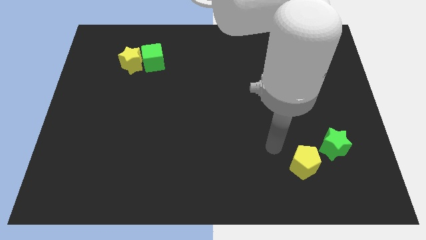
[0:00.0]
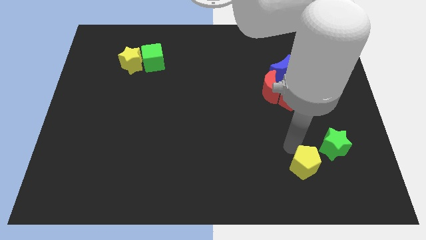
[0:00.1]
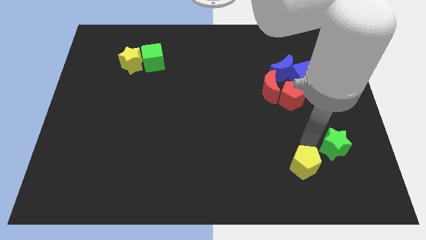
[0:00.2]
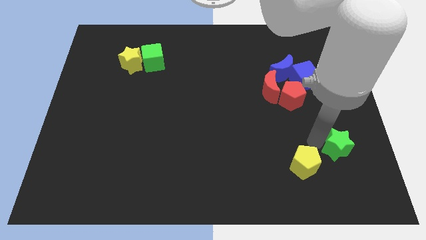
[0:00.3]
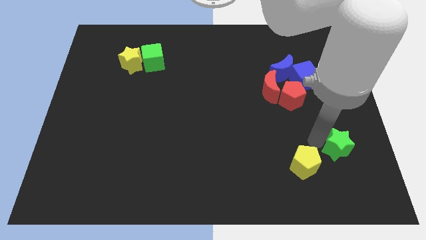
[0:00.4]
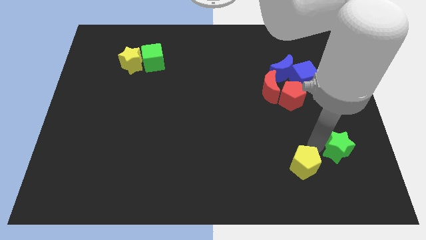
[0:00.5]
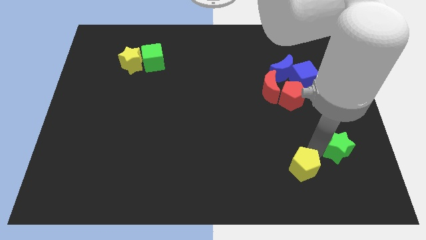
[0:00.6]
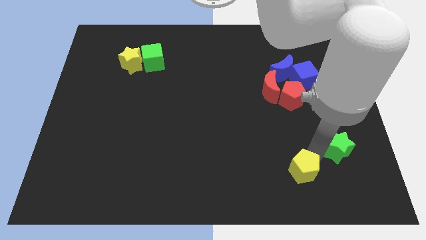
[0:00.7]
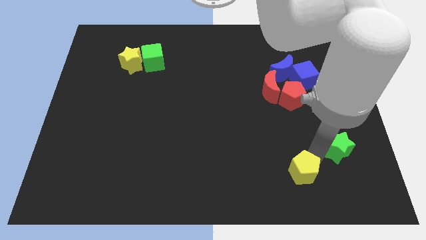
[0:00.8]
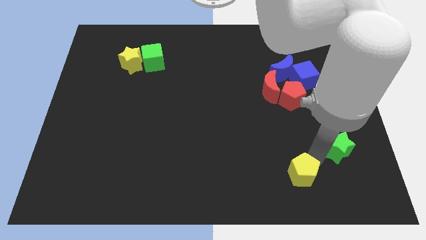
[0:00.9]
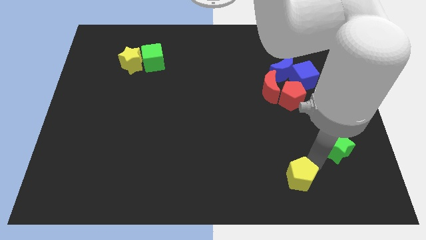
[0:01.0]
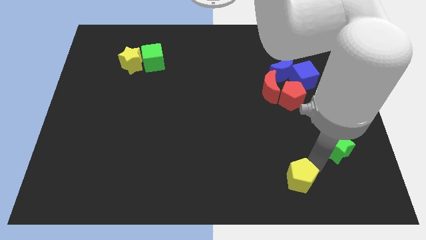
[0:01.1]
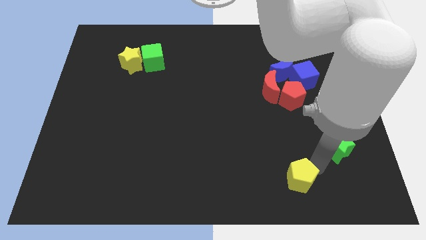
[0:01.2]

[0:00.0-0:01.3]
place your arm in between green star and yellow pentagon

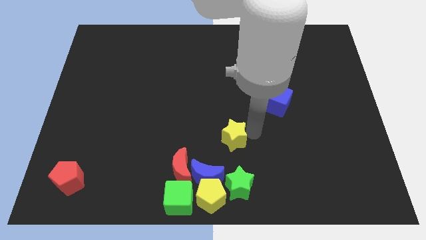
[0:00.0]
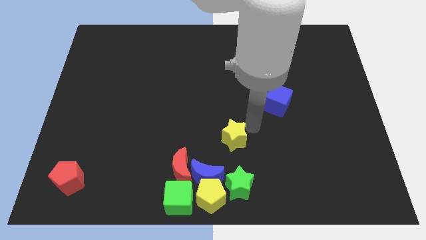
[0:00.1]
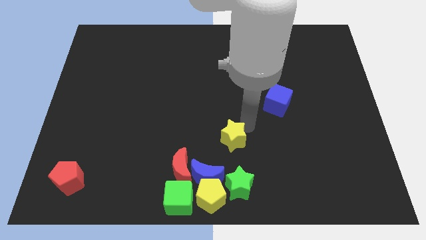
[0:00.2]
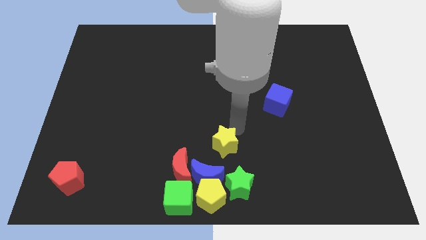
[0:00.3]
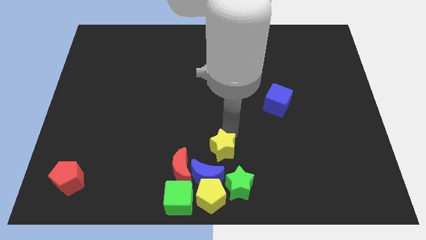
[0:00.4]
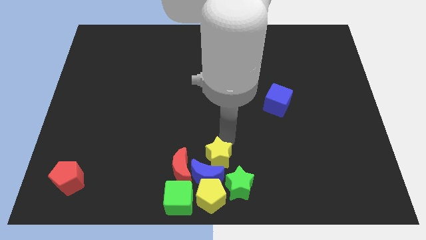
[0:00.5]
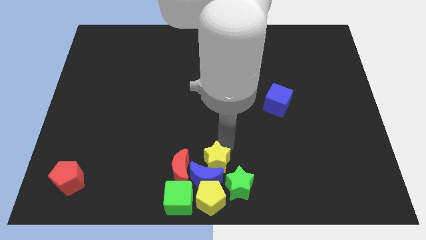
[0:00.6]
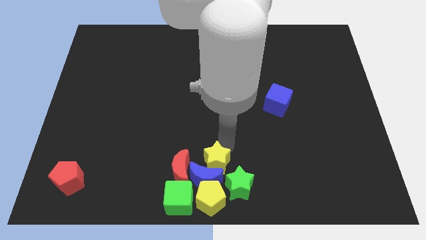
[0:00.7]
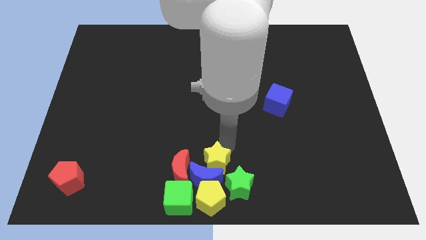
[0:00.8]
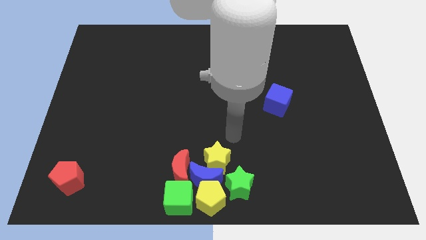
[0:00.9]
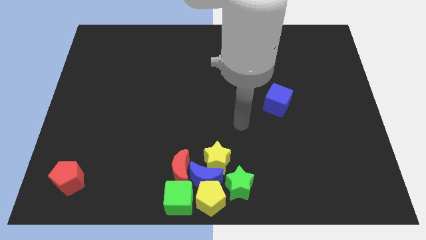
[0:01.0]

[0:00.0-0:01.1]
place yellow star above blue crescent

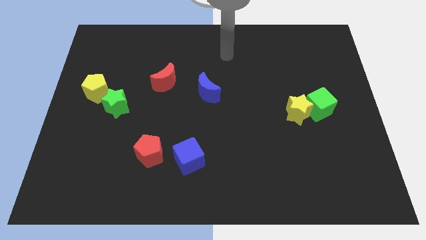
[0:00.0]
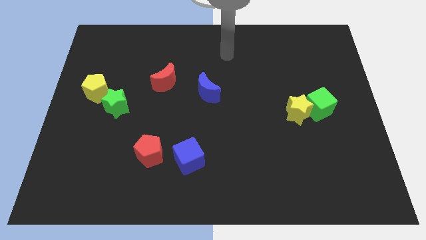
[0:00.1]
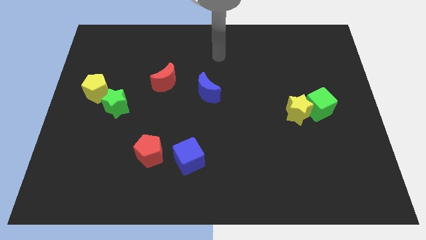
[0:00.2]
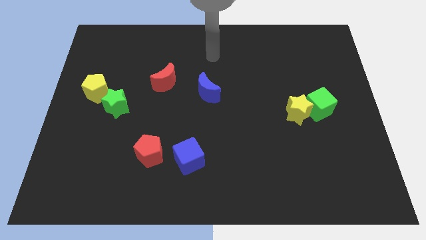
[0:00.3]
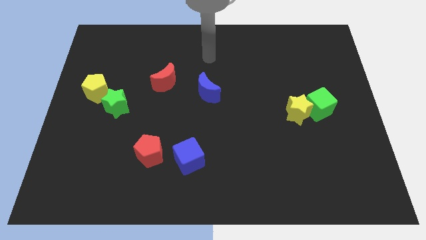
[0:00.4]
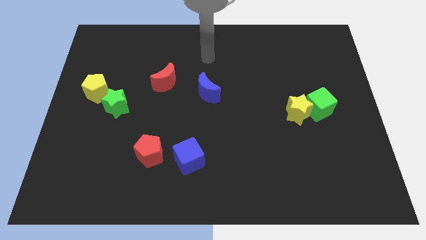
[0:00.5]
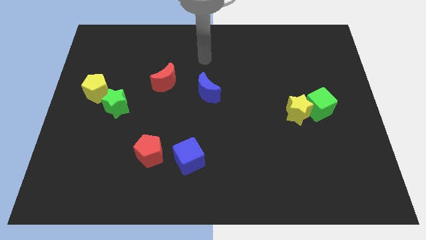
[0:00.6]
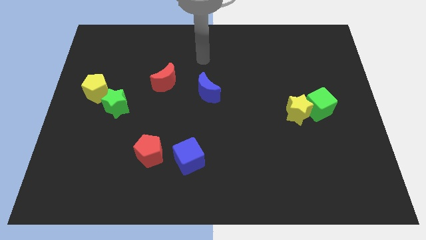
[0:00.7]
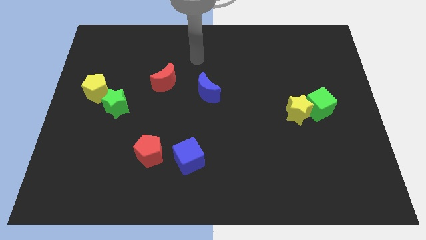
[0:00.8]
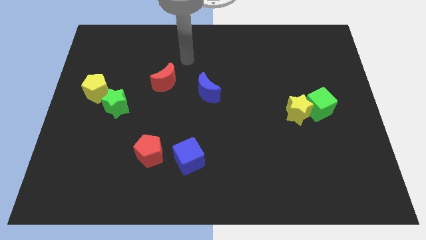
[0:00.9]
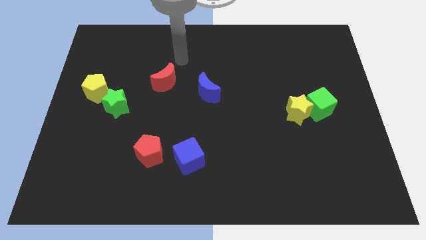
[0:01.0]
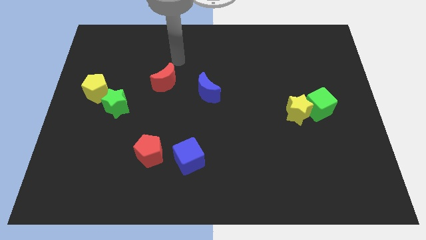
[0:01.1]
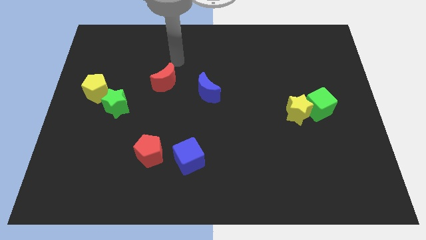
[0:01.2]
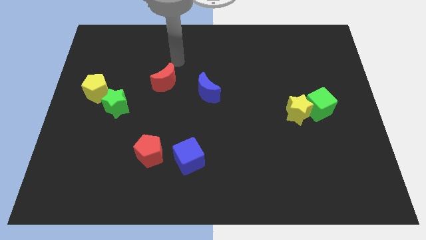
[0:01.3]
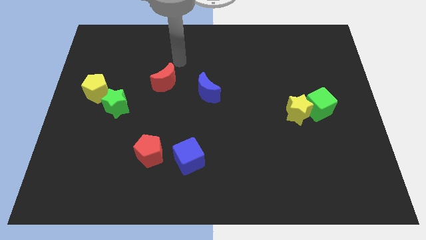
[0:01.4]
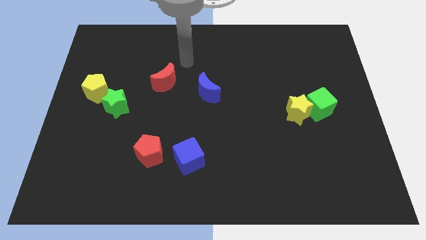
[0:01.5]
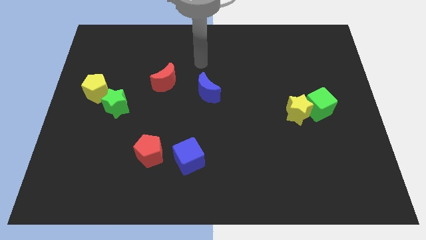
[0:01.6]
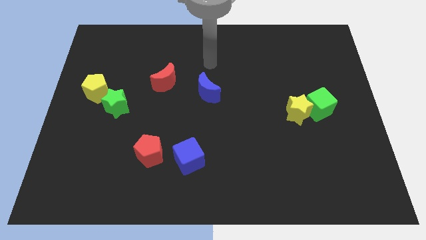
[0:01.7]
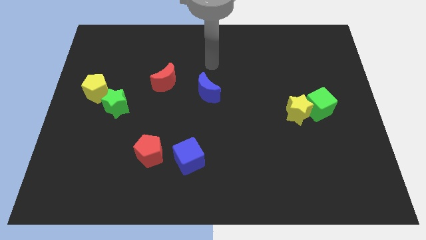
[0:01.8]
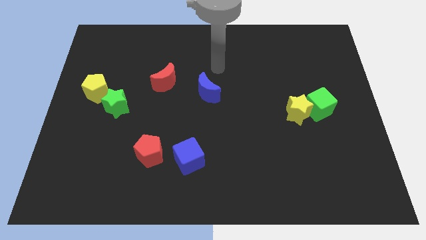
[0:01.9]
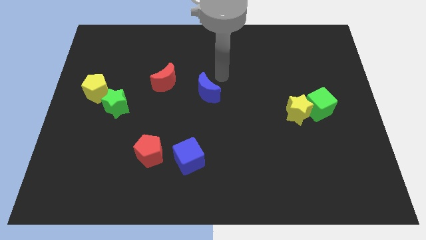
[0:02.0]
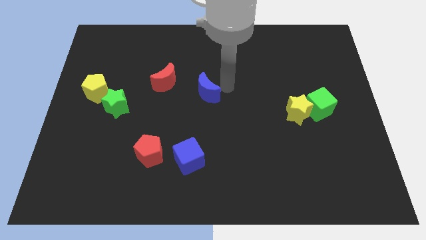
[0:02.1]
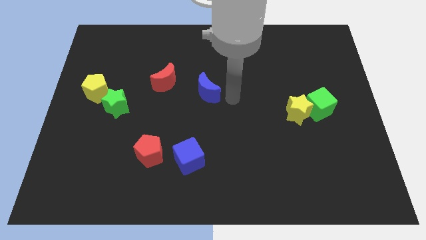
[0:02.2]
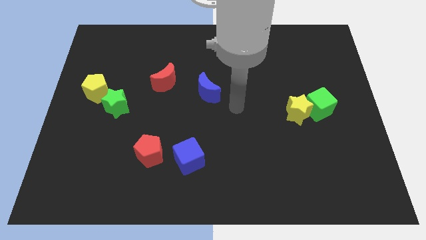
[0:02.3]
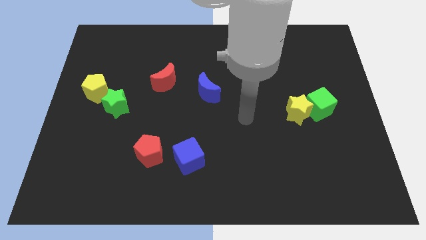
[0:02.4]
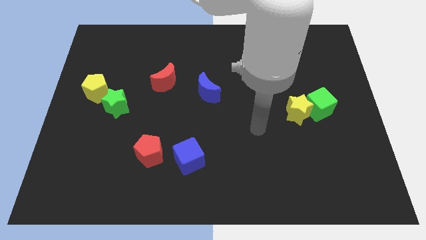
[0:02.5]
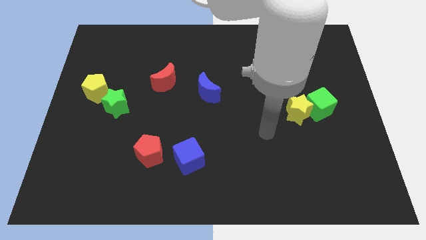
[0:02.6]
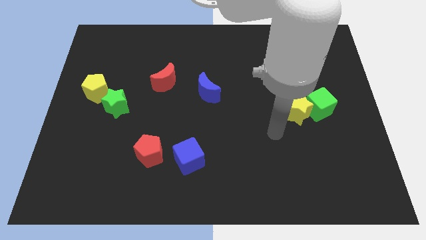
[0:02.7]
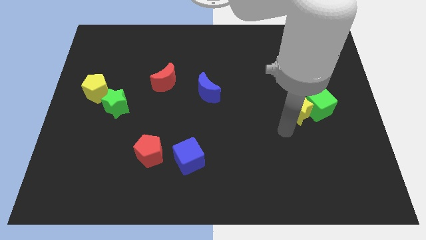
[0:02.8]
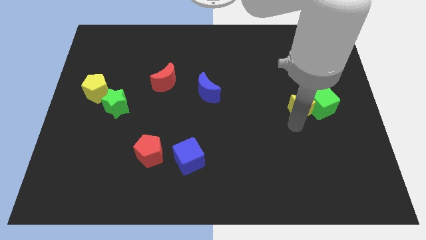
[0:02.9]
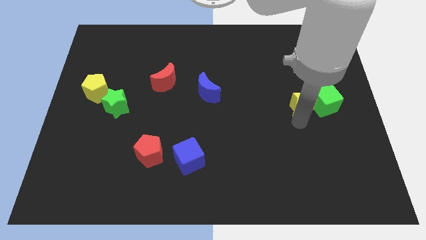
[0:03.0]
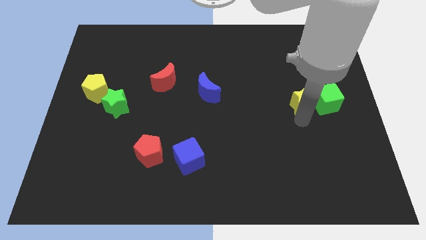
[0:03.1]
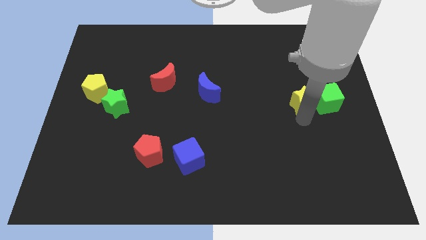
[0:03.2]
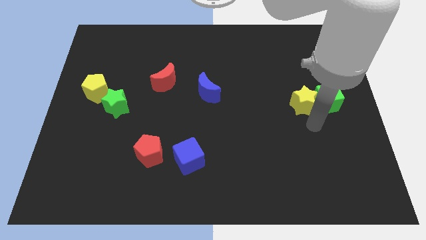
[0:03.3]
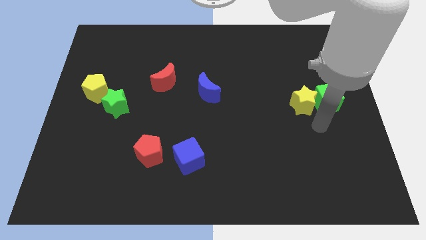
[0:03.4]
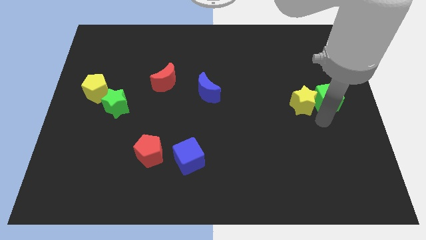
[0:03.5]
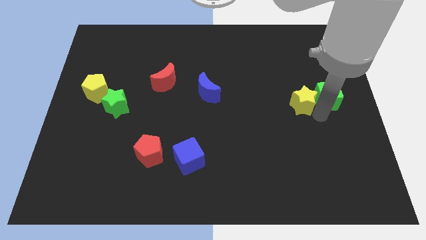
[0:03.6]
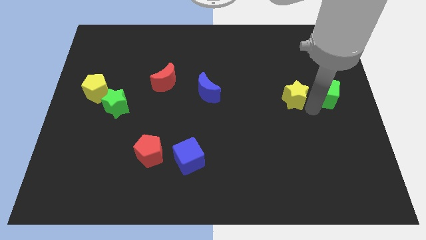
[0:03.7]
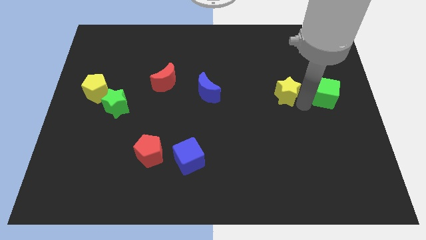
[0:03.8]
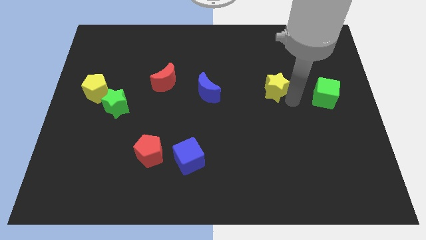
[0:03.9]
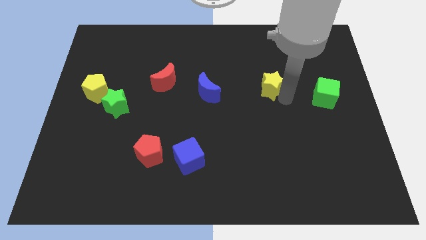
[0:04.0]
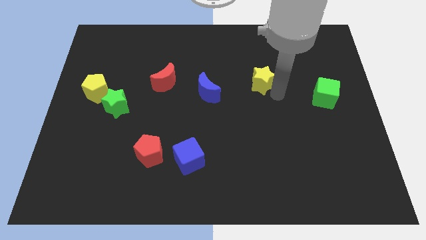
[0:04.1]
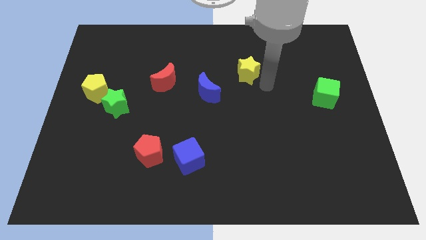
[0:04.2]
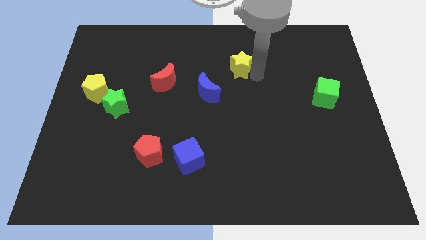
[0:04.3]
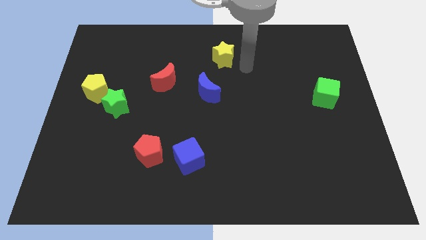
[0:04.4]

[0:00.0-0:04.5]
separate the yellow star from the green cube

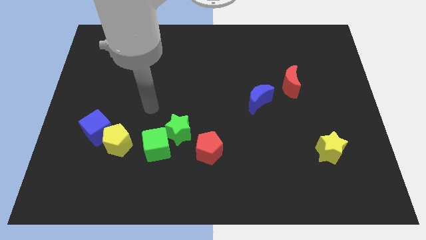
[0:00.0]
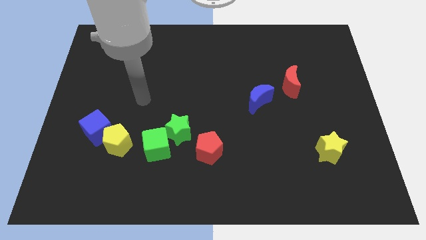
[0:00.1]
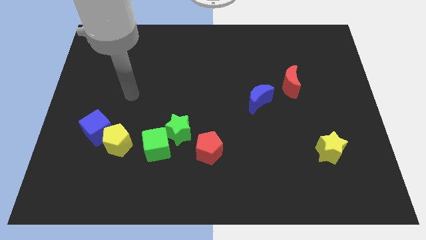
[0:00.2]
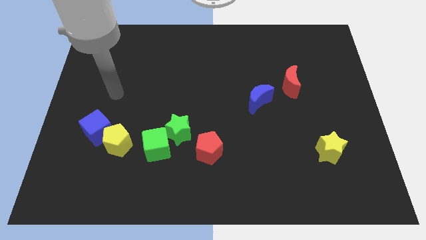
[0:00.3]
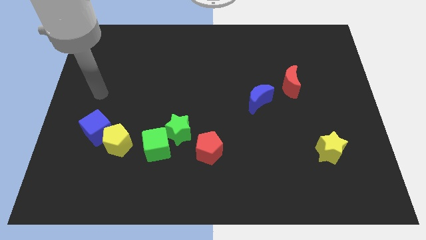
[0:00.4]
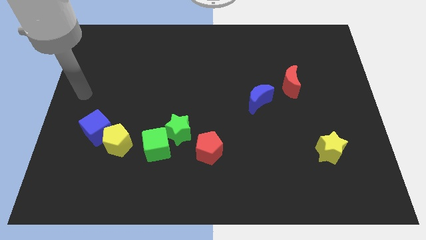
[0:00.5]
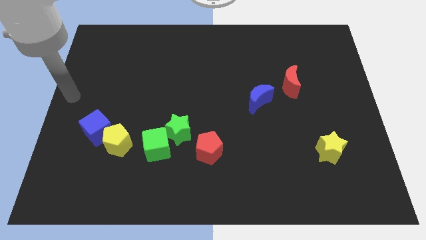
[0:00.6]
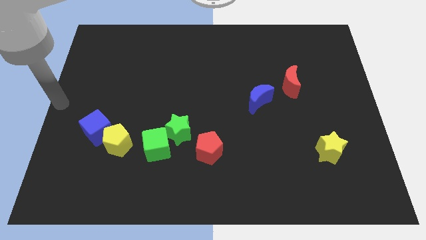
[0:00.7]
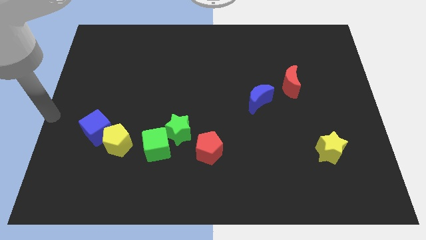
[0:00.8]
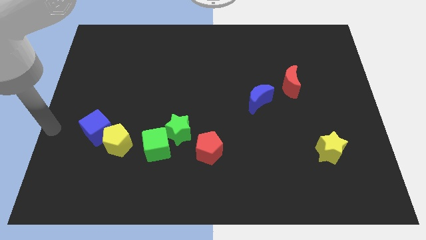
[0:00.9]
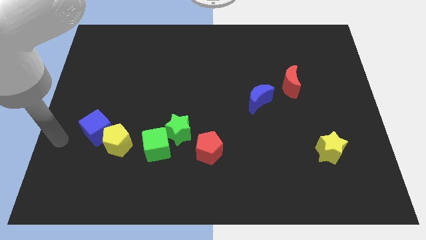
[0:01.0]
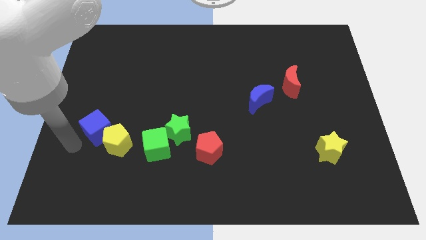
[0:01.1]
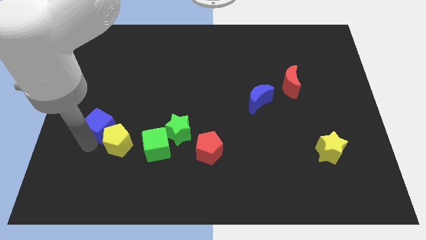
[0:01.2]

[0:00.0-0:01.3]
place your arm at the bottom of the blue cube

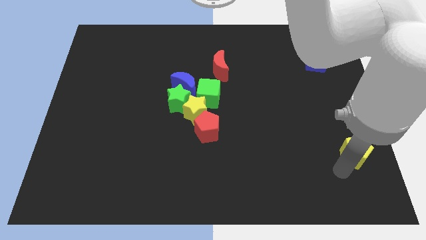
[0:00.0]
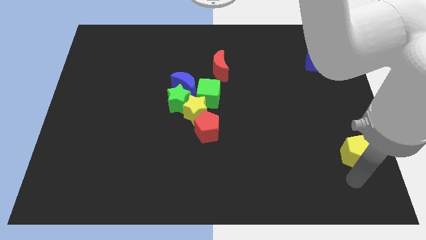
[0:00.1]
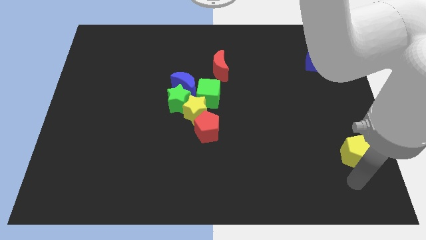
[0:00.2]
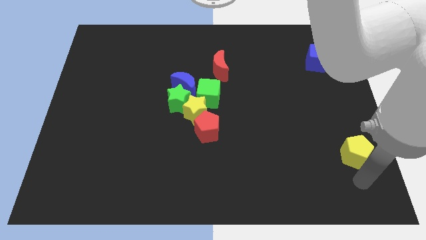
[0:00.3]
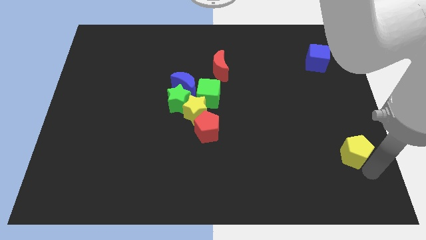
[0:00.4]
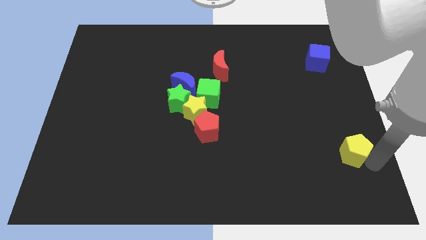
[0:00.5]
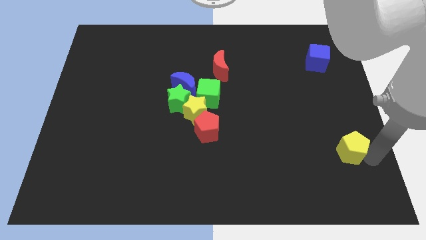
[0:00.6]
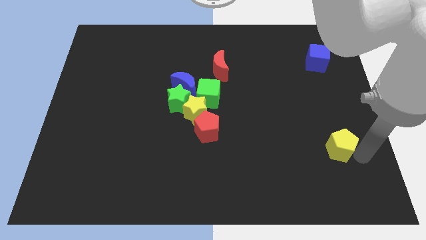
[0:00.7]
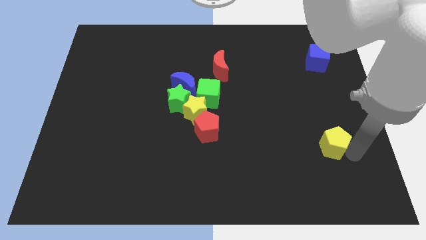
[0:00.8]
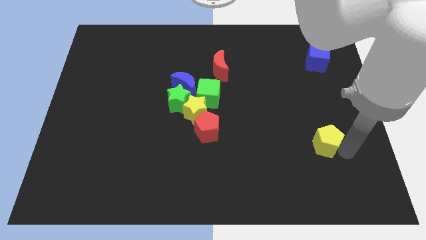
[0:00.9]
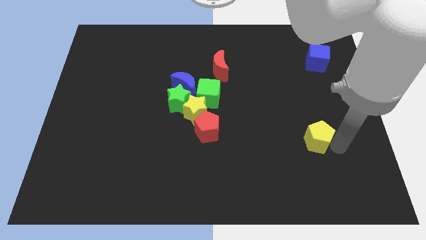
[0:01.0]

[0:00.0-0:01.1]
push the yellow pentagon below the blue cube
